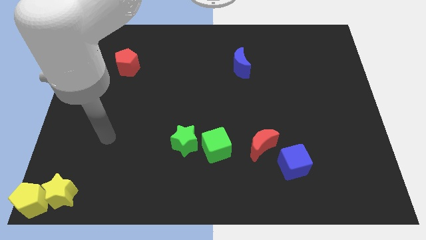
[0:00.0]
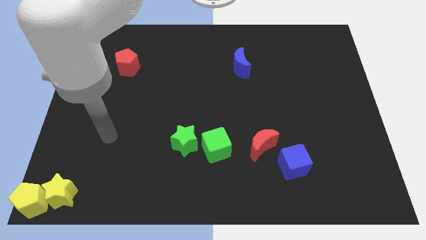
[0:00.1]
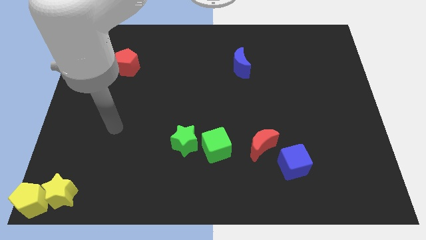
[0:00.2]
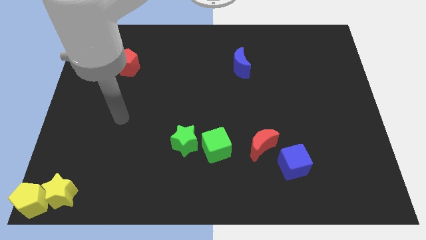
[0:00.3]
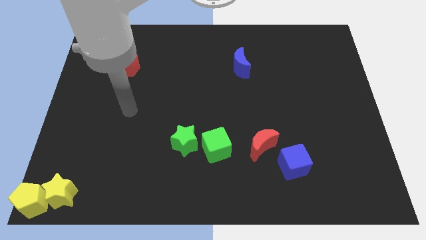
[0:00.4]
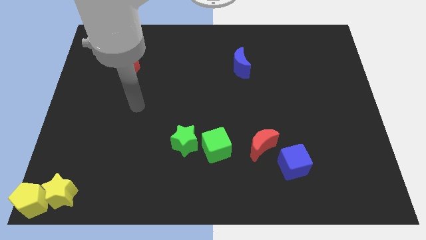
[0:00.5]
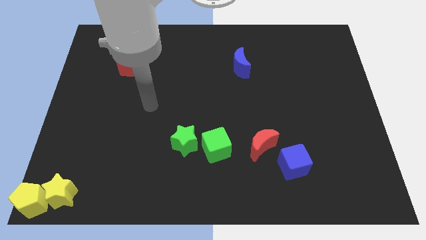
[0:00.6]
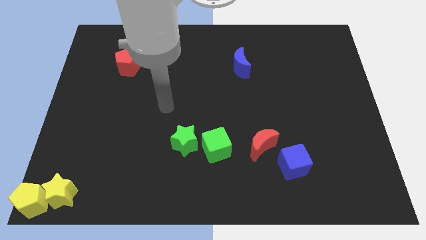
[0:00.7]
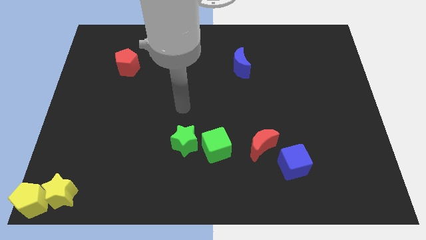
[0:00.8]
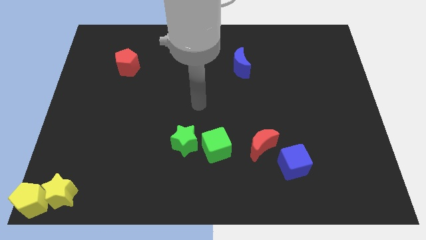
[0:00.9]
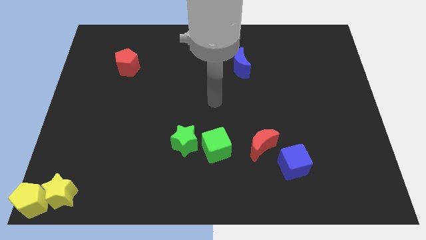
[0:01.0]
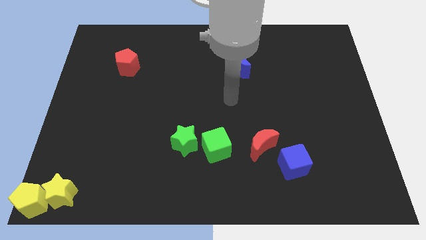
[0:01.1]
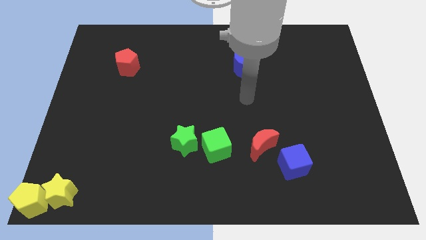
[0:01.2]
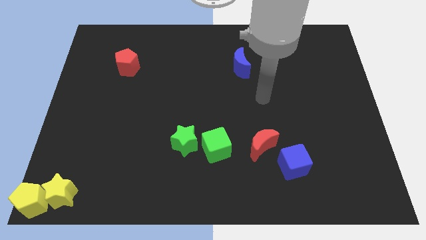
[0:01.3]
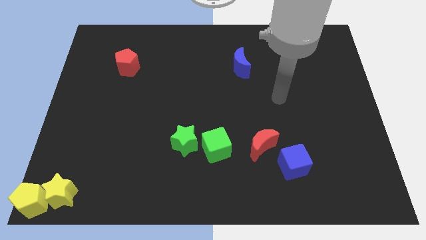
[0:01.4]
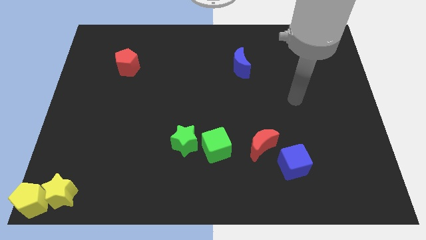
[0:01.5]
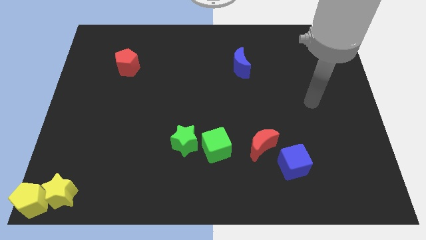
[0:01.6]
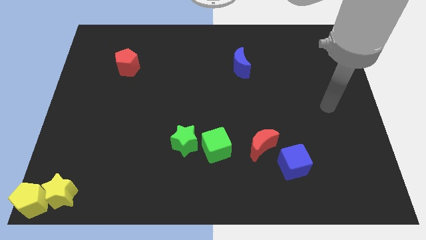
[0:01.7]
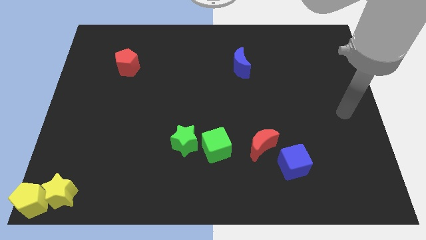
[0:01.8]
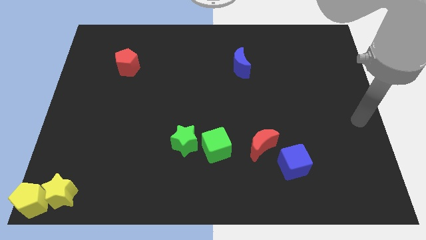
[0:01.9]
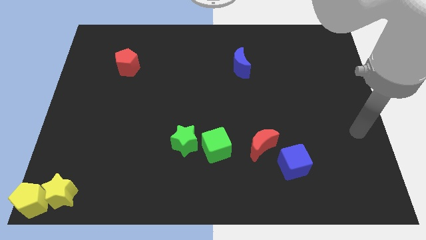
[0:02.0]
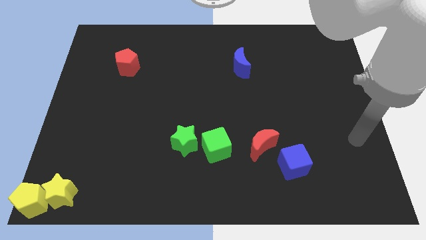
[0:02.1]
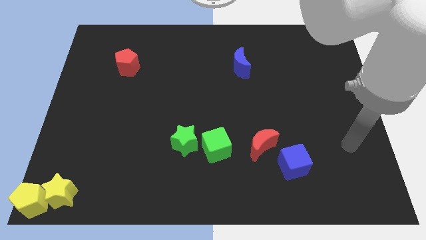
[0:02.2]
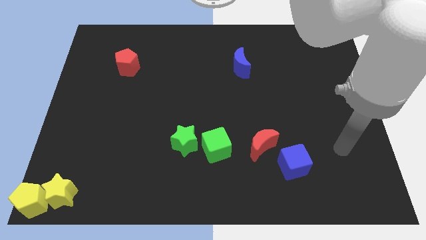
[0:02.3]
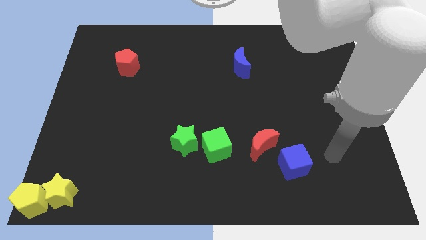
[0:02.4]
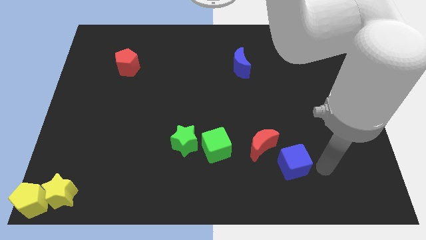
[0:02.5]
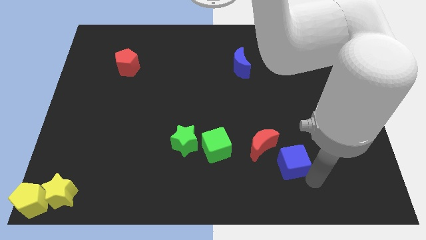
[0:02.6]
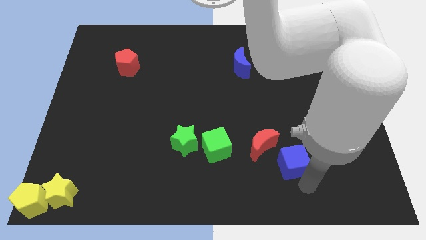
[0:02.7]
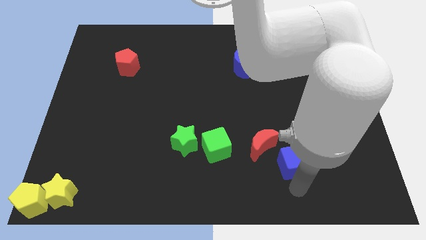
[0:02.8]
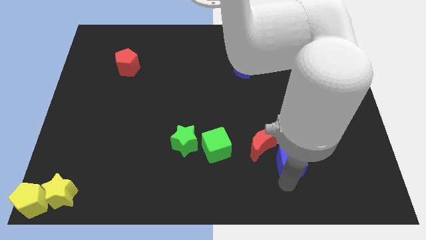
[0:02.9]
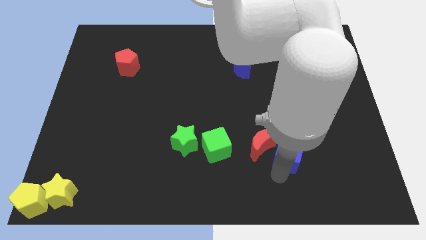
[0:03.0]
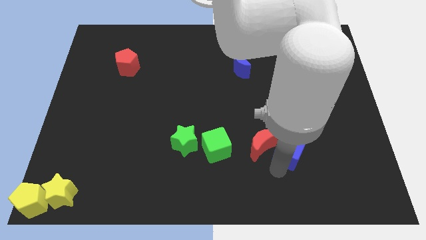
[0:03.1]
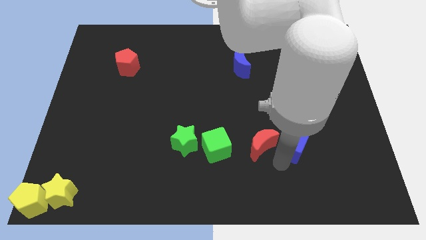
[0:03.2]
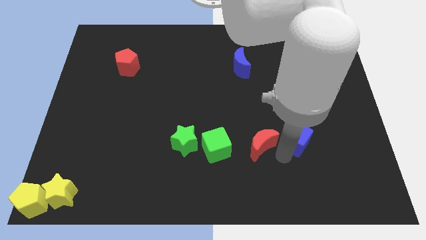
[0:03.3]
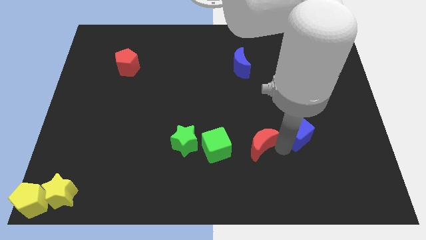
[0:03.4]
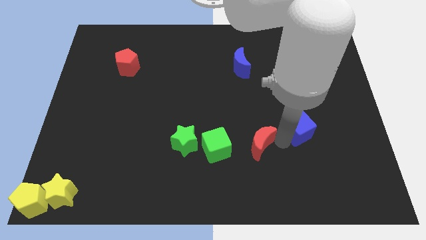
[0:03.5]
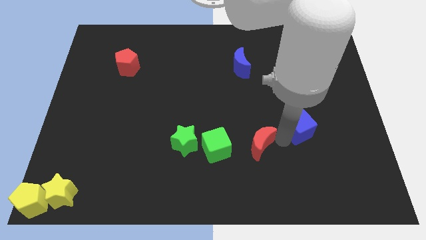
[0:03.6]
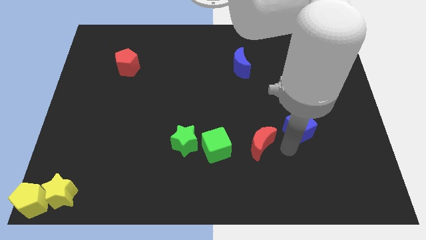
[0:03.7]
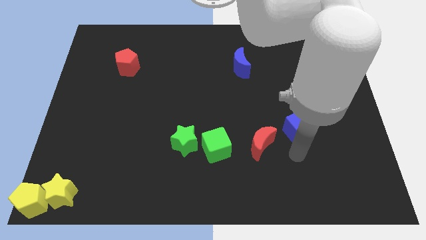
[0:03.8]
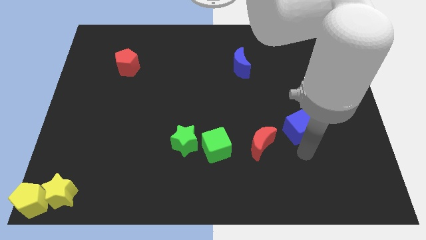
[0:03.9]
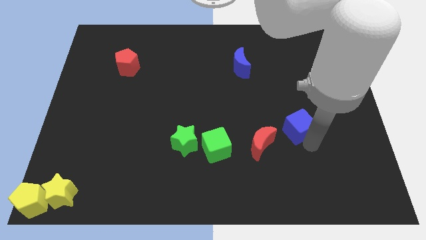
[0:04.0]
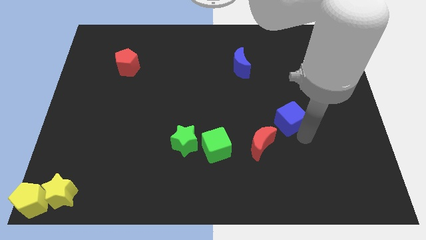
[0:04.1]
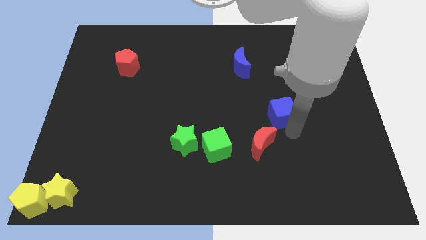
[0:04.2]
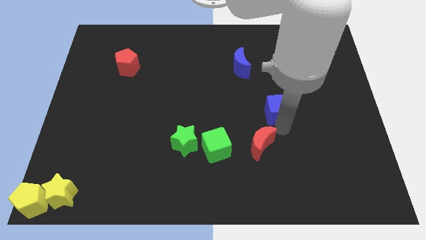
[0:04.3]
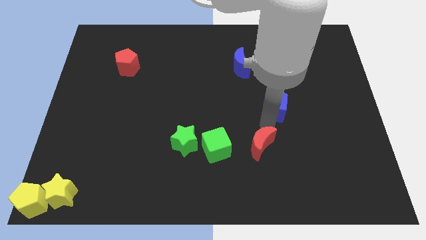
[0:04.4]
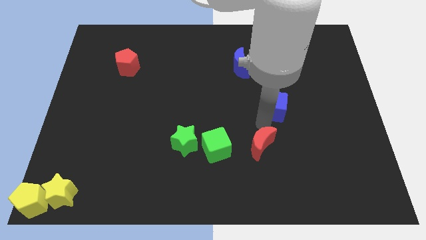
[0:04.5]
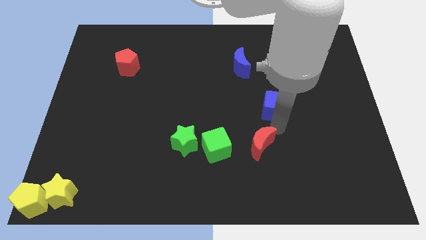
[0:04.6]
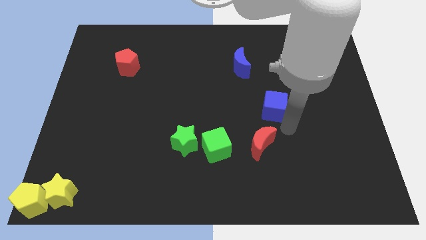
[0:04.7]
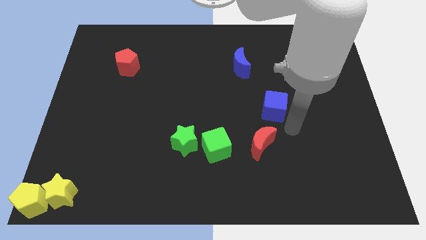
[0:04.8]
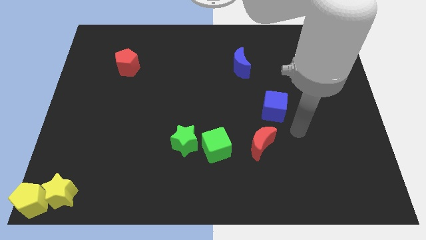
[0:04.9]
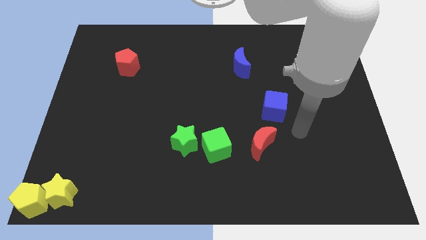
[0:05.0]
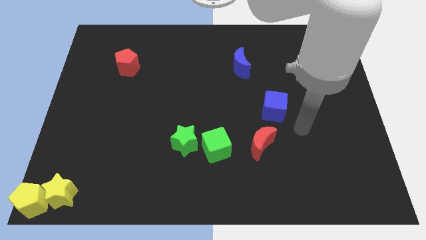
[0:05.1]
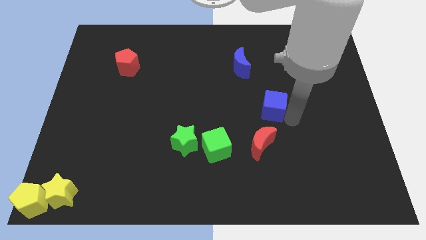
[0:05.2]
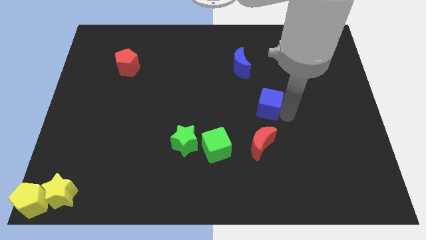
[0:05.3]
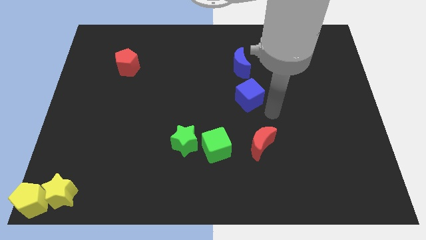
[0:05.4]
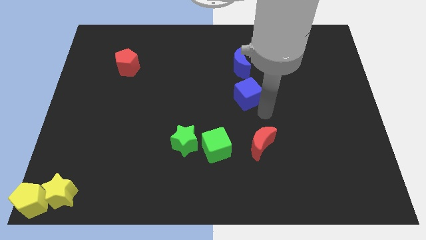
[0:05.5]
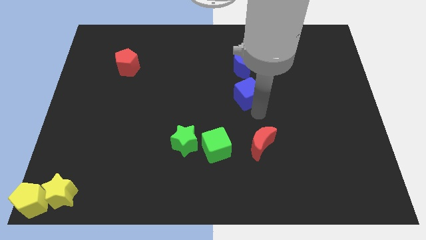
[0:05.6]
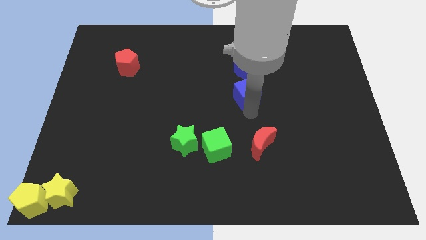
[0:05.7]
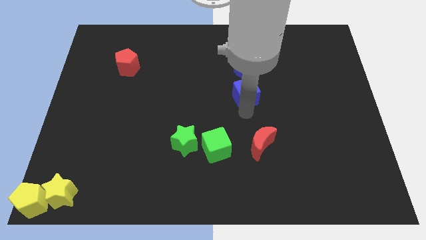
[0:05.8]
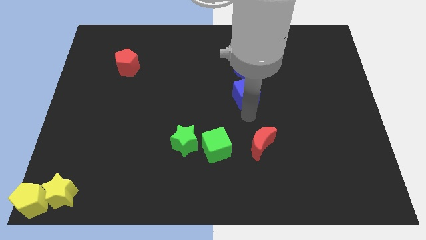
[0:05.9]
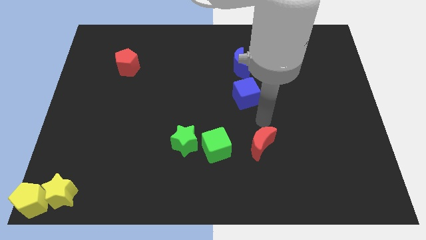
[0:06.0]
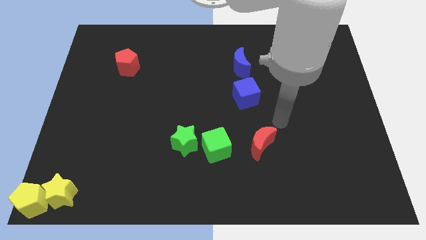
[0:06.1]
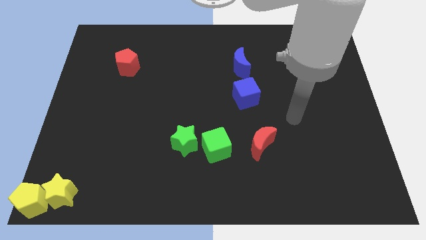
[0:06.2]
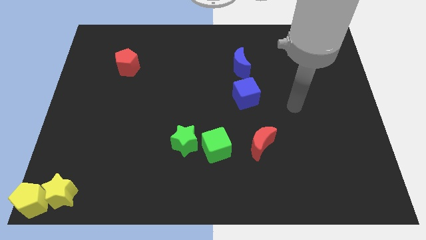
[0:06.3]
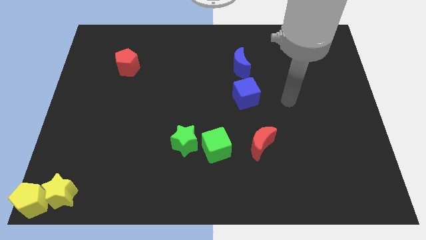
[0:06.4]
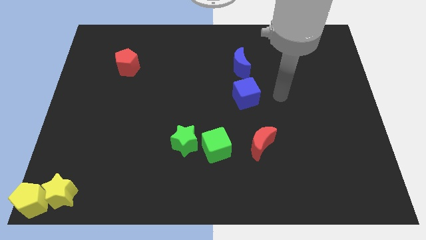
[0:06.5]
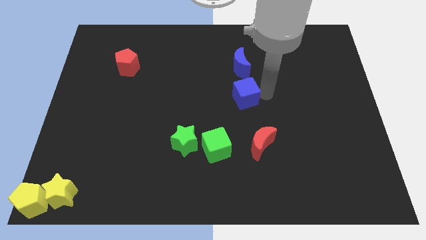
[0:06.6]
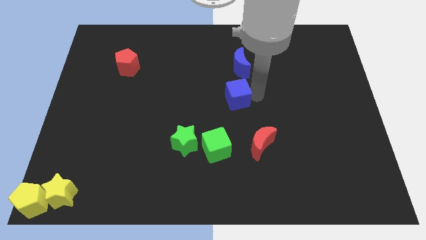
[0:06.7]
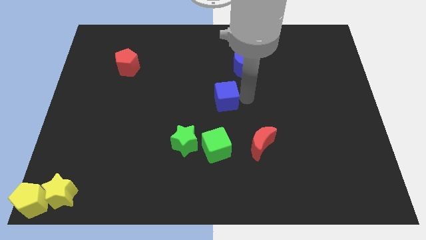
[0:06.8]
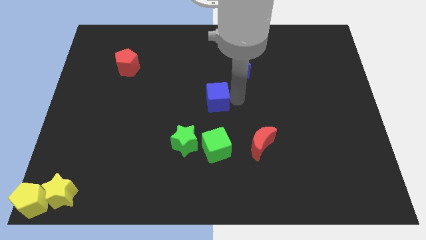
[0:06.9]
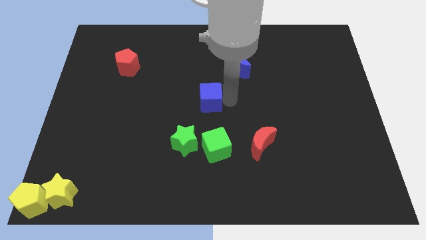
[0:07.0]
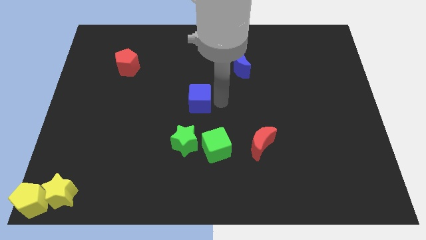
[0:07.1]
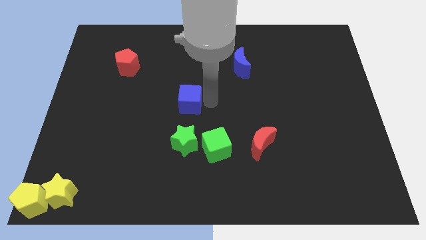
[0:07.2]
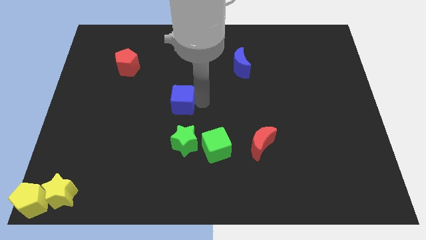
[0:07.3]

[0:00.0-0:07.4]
push the blue cube to the center of the board

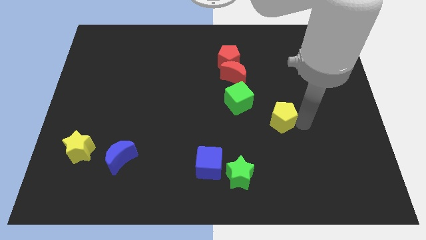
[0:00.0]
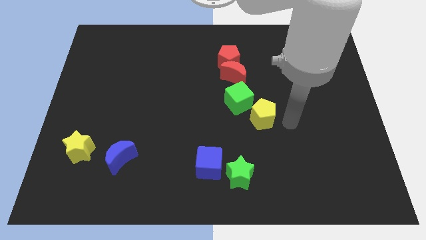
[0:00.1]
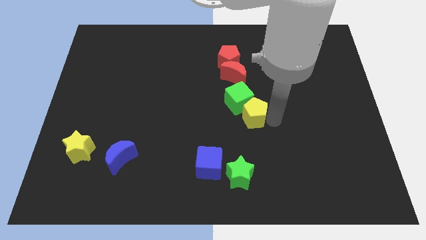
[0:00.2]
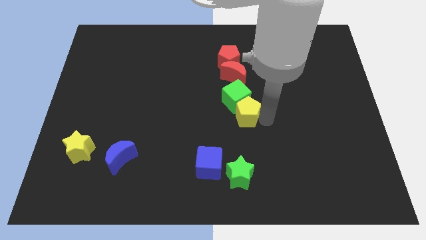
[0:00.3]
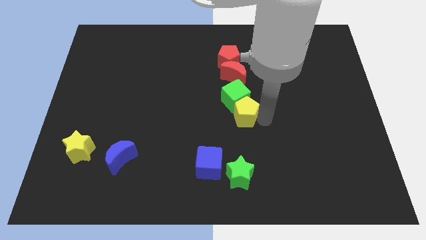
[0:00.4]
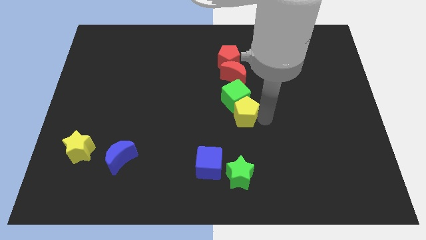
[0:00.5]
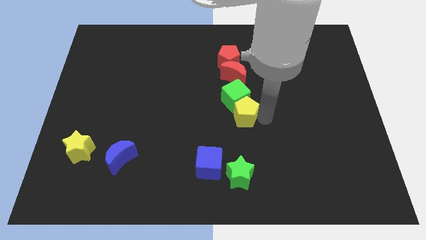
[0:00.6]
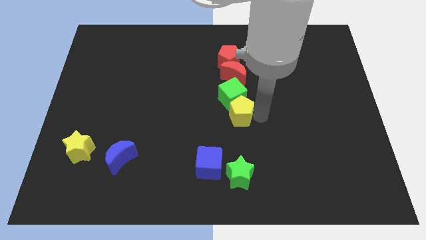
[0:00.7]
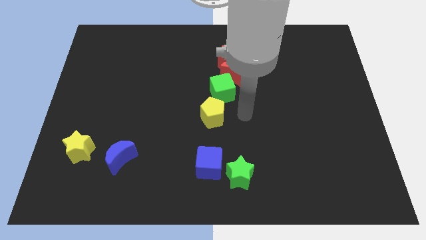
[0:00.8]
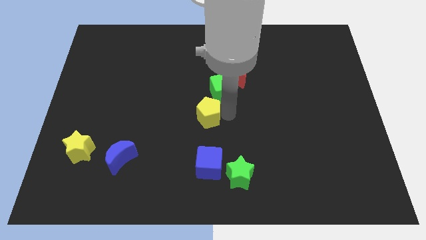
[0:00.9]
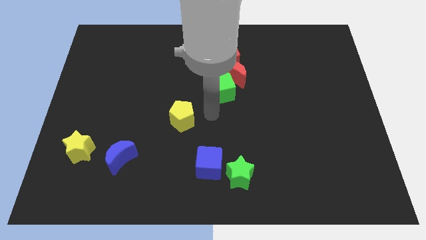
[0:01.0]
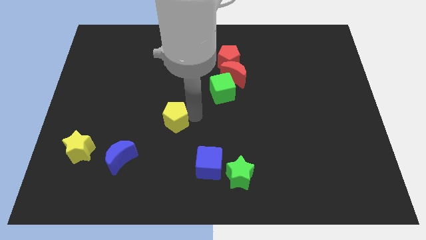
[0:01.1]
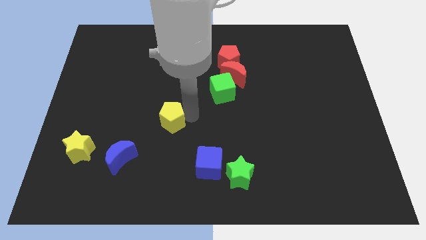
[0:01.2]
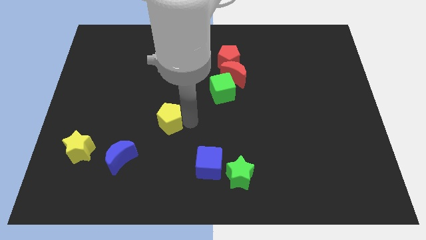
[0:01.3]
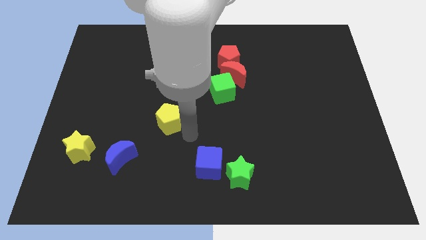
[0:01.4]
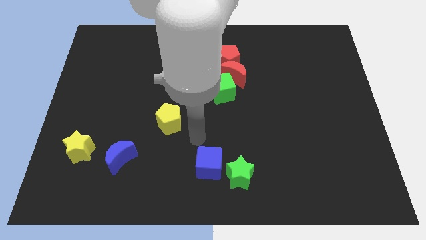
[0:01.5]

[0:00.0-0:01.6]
move the yellow pentagon to the left side
